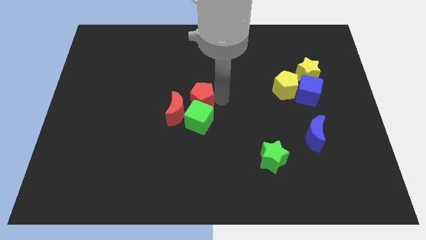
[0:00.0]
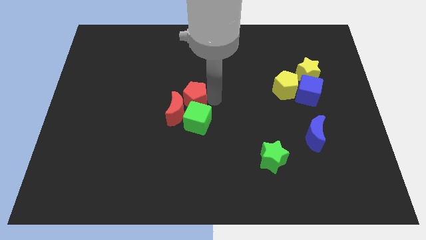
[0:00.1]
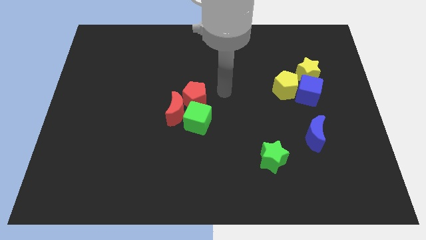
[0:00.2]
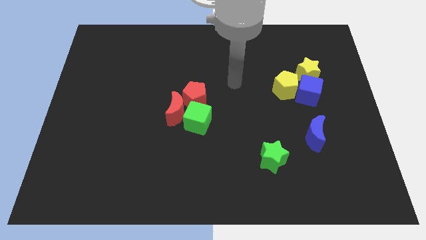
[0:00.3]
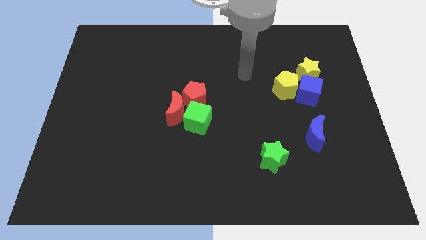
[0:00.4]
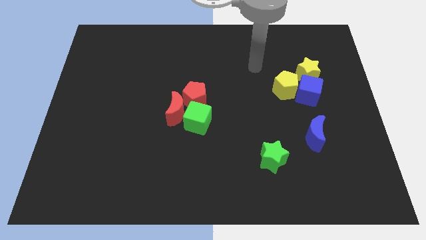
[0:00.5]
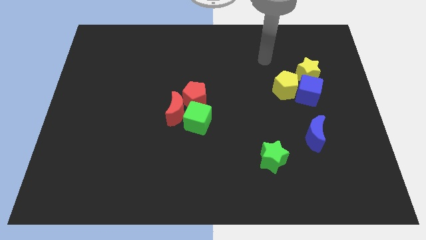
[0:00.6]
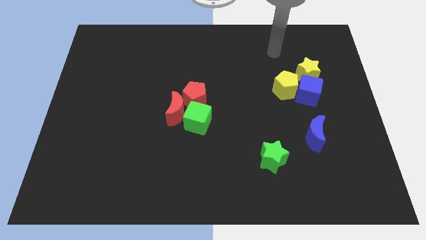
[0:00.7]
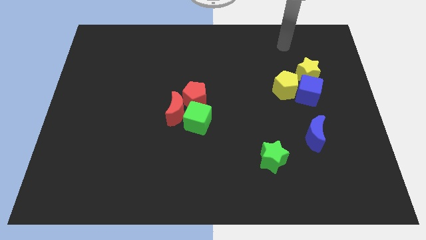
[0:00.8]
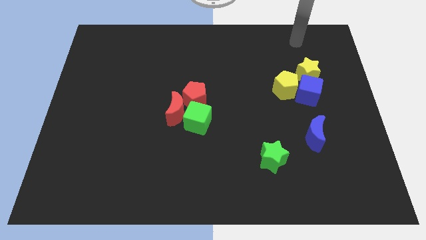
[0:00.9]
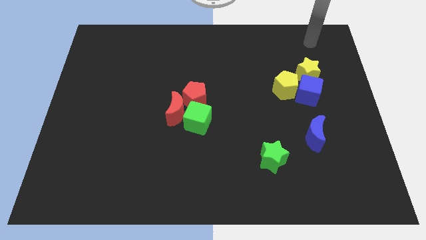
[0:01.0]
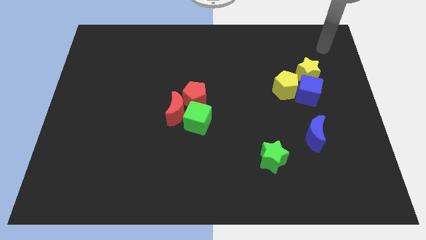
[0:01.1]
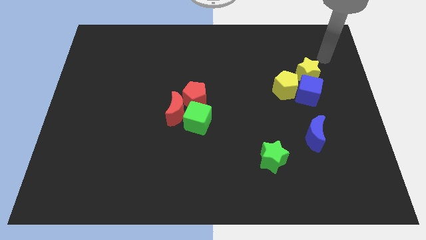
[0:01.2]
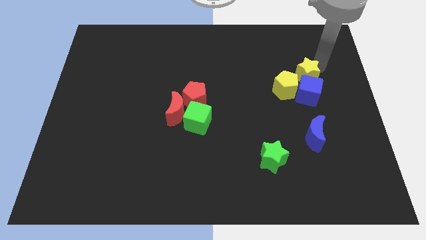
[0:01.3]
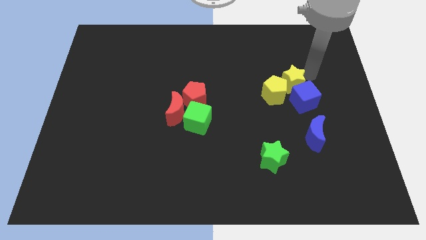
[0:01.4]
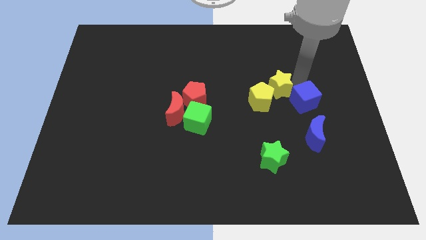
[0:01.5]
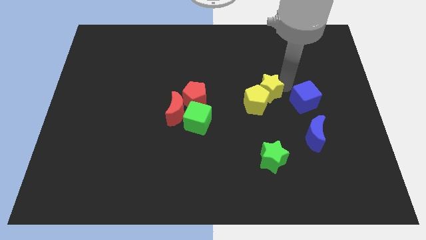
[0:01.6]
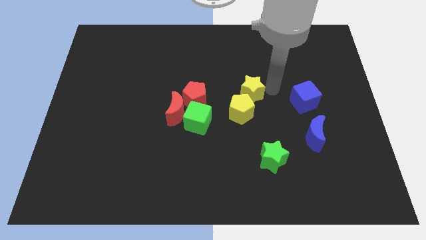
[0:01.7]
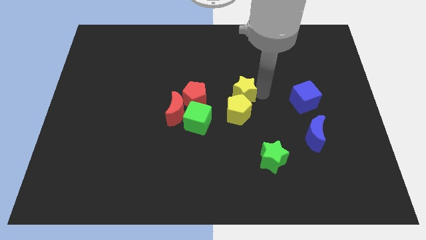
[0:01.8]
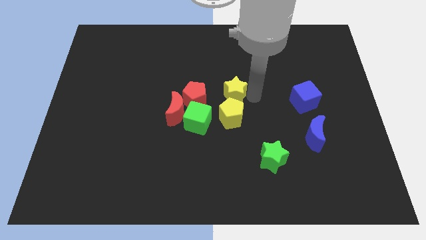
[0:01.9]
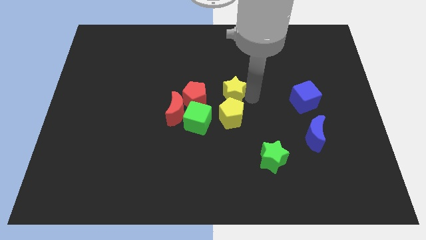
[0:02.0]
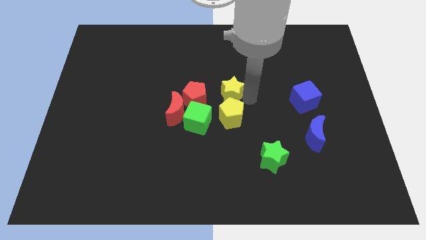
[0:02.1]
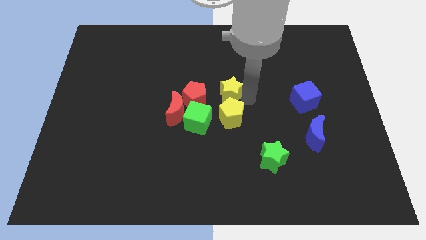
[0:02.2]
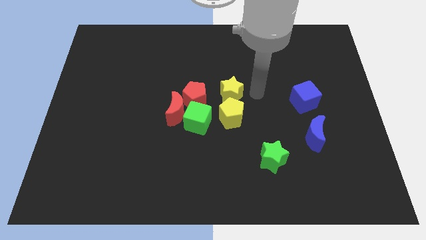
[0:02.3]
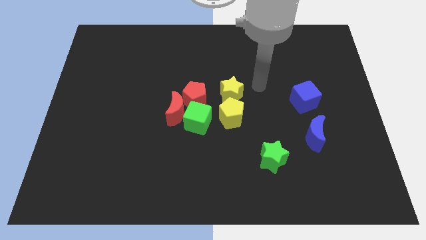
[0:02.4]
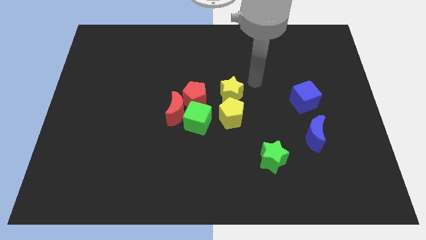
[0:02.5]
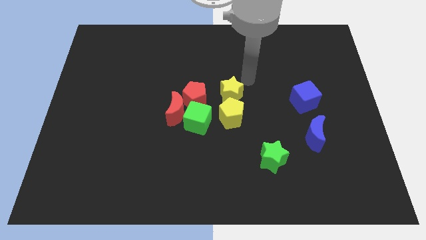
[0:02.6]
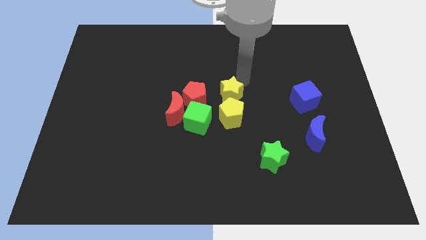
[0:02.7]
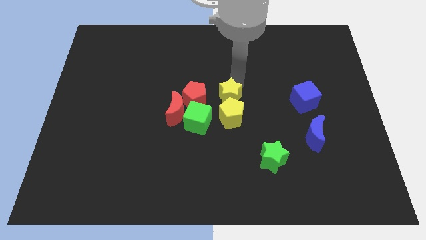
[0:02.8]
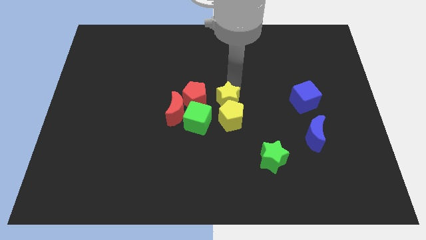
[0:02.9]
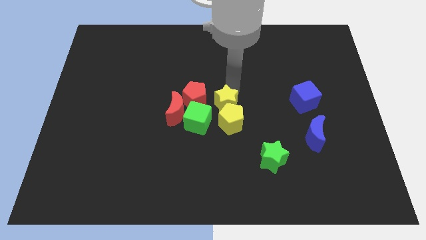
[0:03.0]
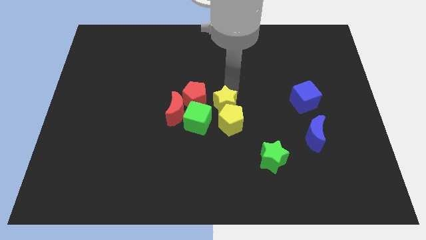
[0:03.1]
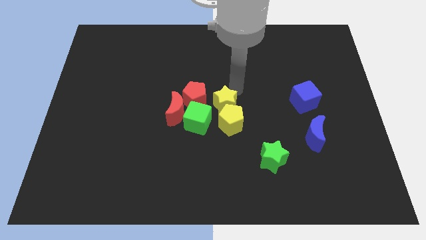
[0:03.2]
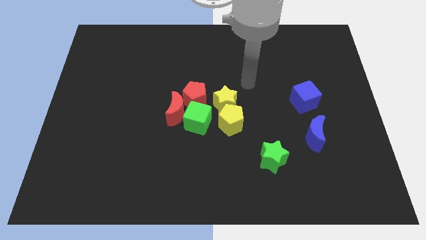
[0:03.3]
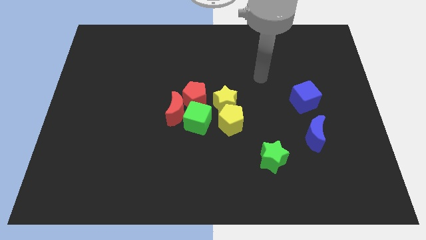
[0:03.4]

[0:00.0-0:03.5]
push the yellow blocks to the center of the board

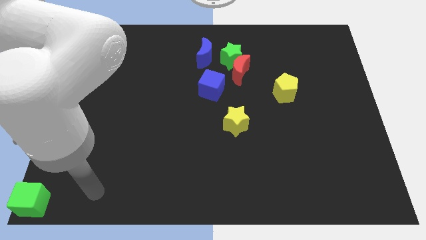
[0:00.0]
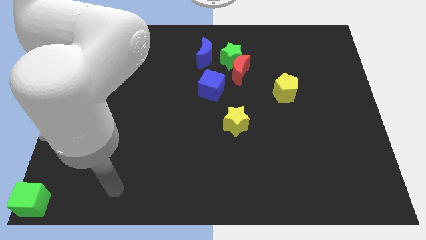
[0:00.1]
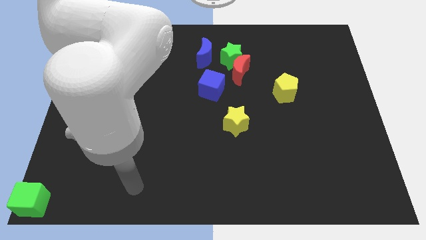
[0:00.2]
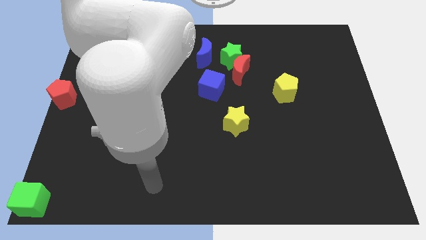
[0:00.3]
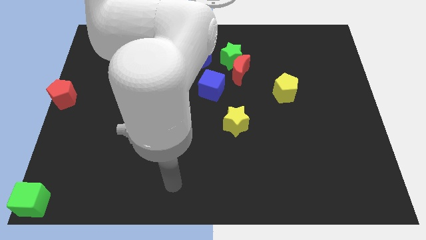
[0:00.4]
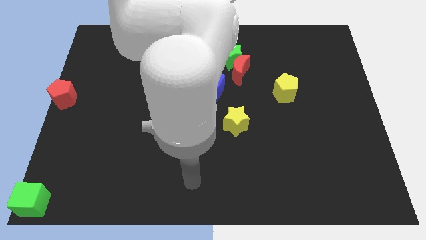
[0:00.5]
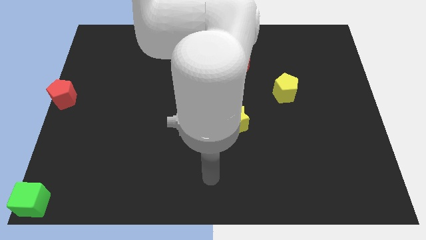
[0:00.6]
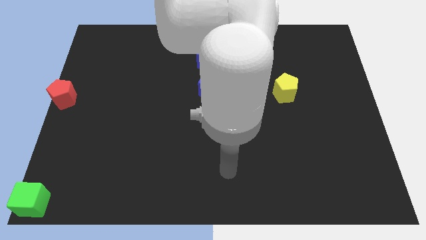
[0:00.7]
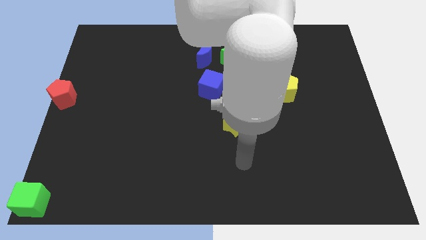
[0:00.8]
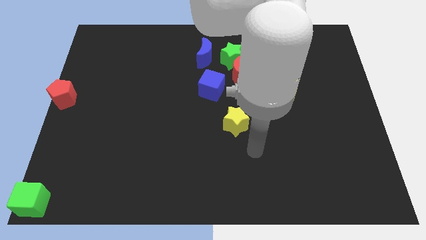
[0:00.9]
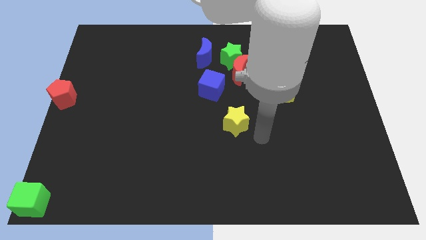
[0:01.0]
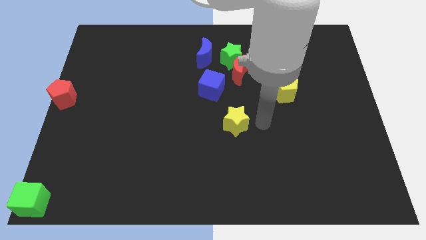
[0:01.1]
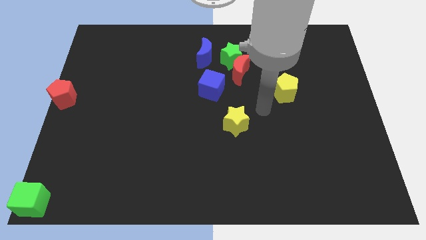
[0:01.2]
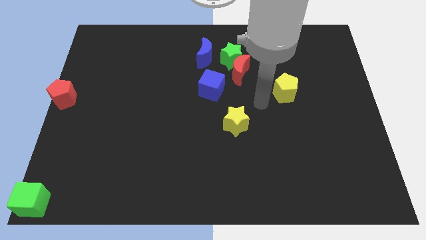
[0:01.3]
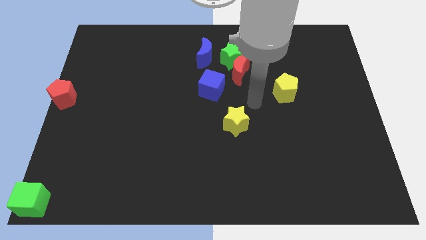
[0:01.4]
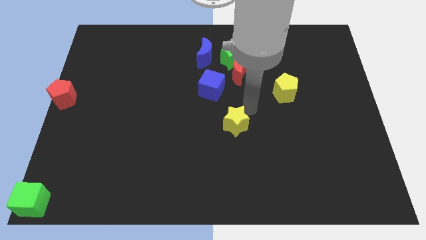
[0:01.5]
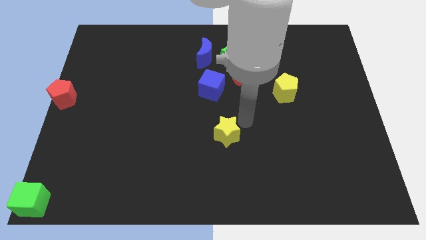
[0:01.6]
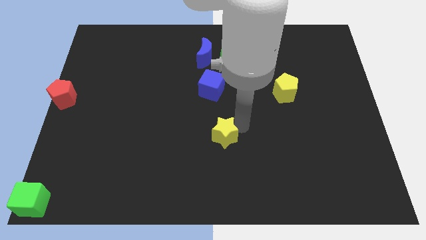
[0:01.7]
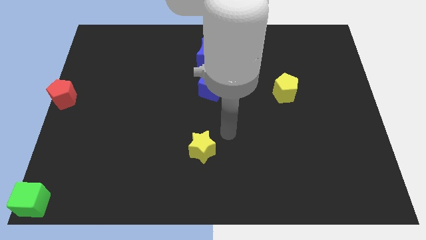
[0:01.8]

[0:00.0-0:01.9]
move the yellow star towards the bottom left side

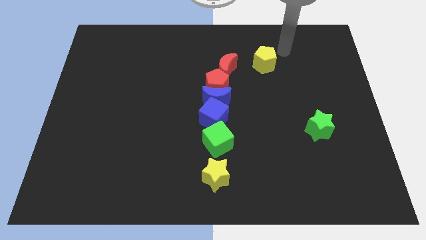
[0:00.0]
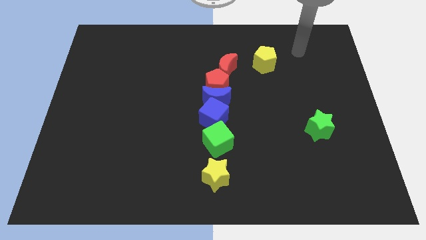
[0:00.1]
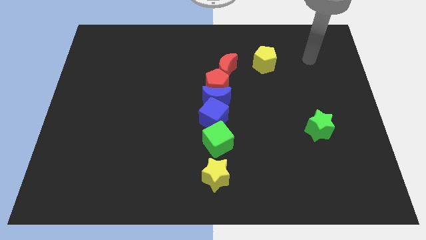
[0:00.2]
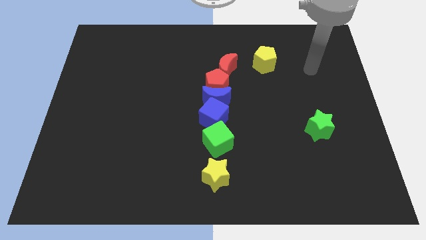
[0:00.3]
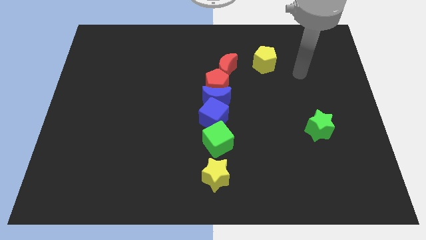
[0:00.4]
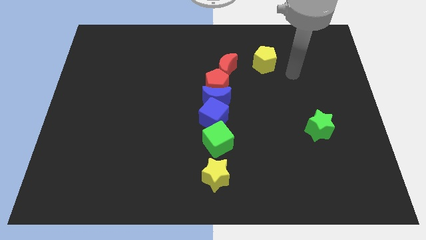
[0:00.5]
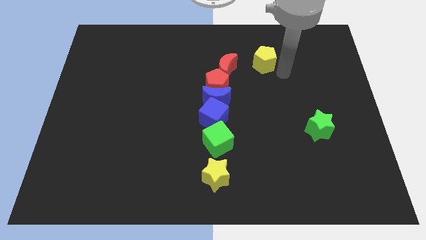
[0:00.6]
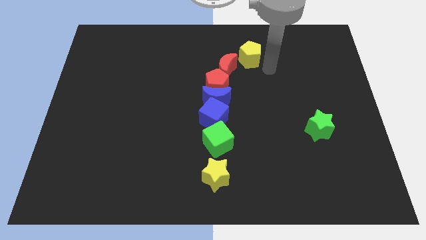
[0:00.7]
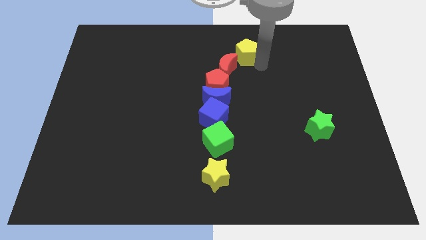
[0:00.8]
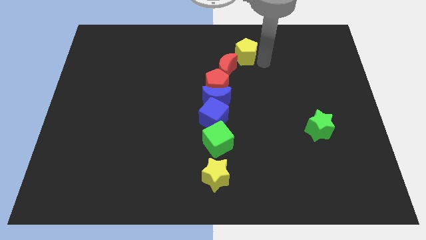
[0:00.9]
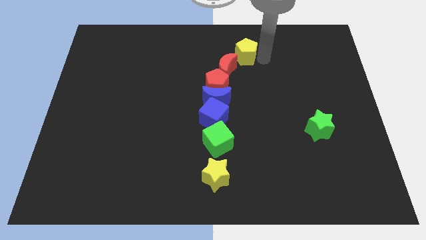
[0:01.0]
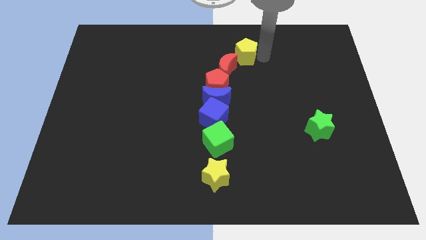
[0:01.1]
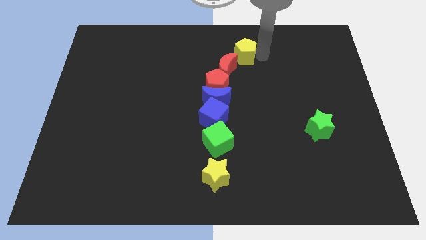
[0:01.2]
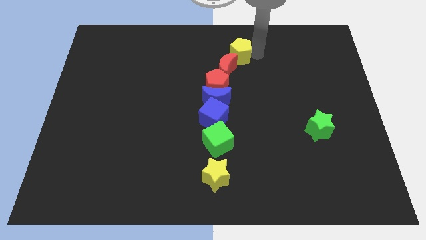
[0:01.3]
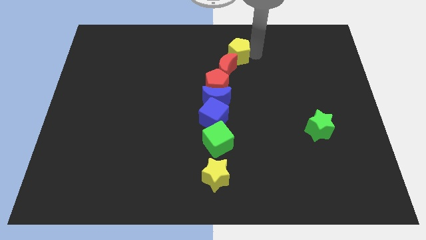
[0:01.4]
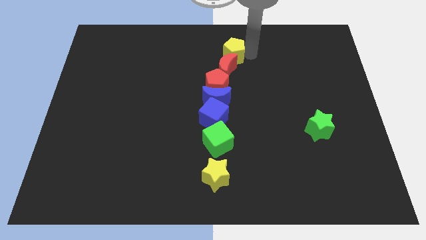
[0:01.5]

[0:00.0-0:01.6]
place the yellow pentagan in line

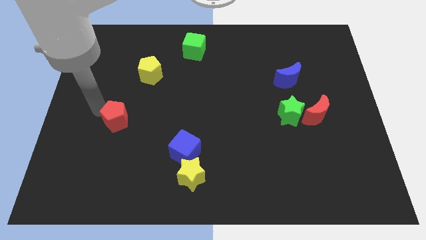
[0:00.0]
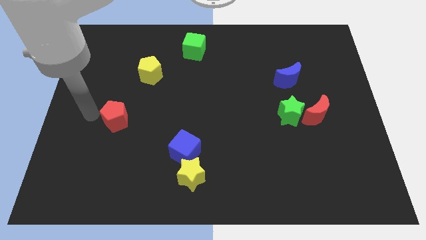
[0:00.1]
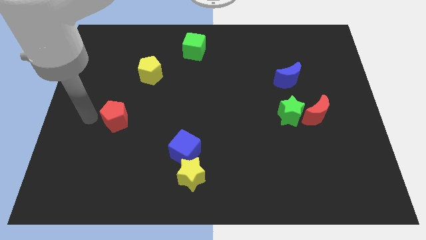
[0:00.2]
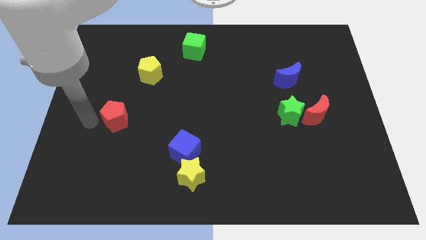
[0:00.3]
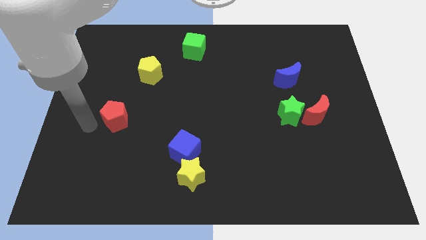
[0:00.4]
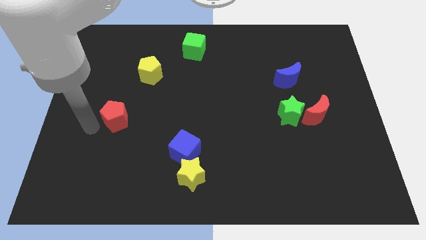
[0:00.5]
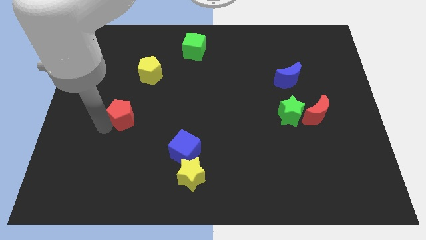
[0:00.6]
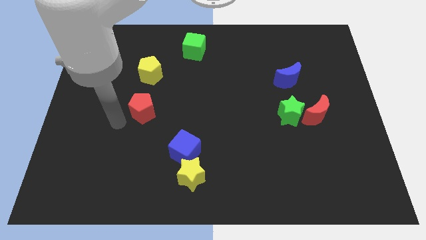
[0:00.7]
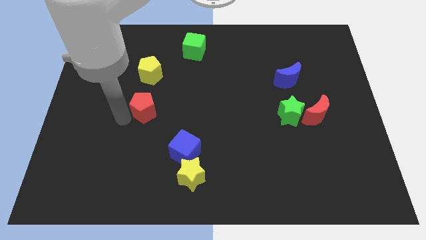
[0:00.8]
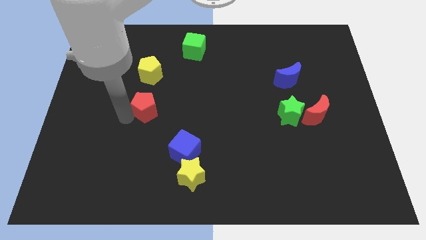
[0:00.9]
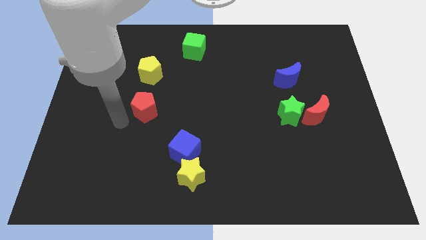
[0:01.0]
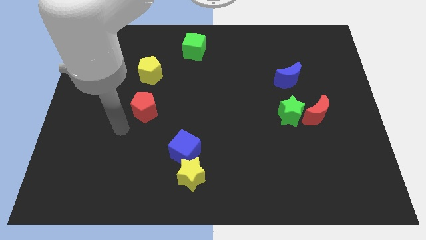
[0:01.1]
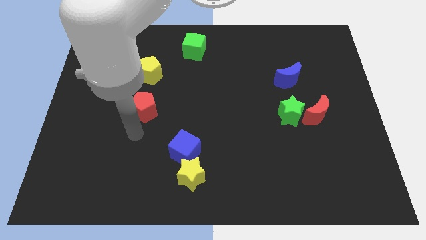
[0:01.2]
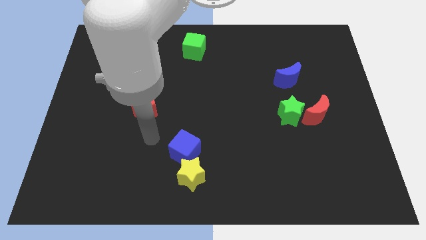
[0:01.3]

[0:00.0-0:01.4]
drag the red pentagon diagonally top left to blue cube

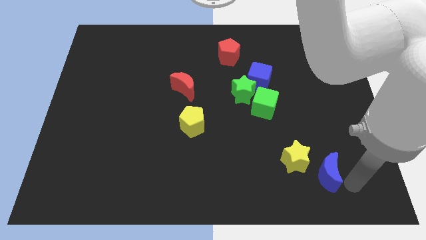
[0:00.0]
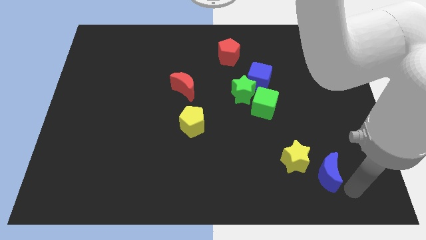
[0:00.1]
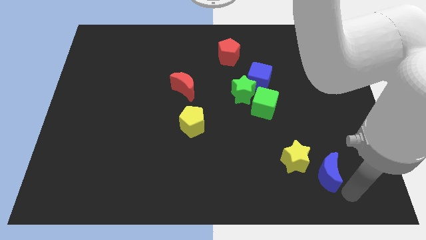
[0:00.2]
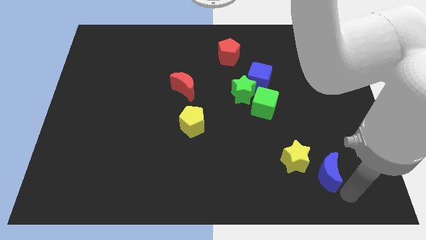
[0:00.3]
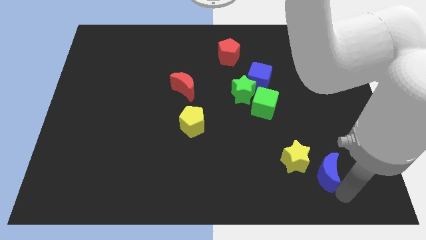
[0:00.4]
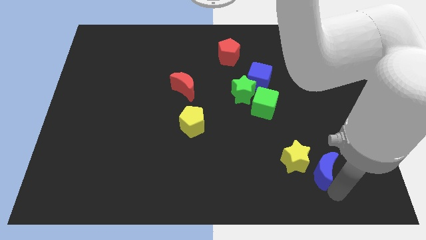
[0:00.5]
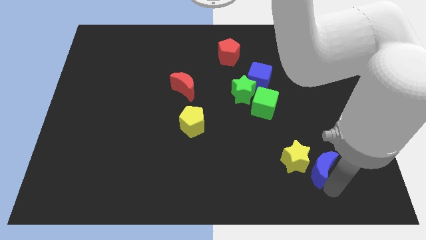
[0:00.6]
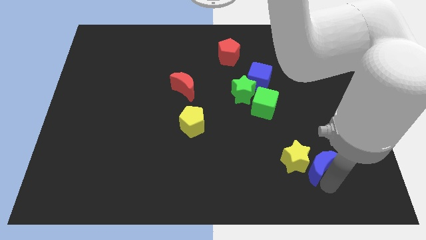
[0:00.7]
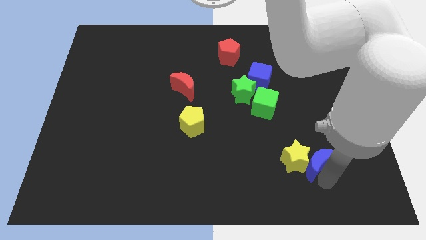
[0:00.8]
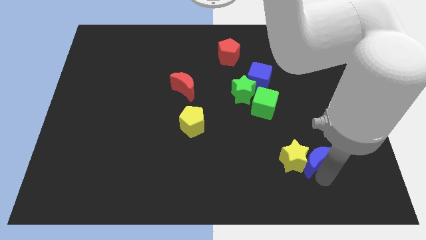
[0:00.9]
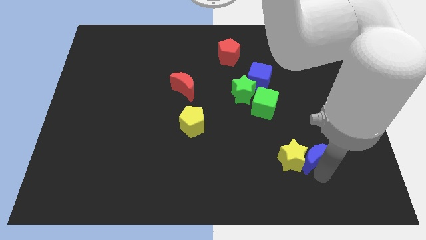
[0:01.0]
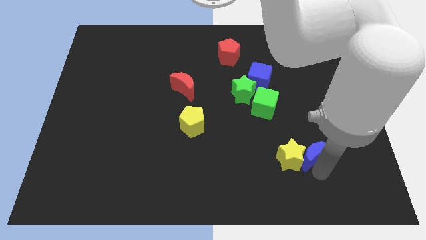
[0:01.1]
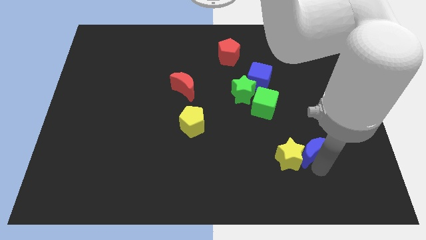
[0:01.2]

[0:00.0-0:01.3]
push the blue moon to the right side of the yellow star
